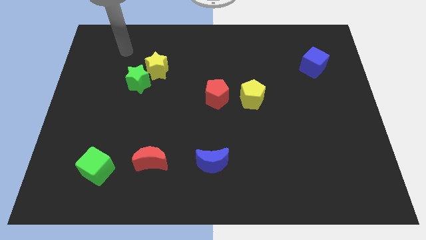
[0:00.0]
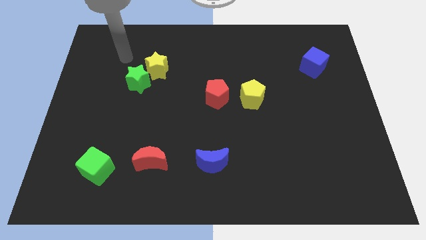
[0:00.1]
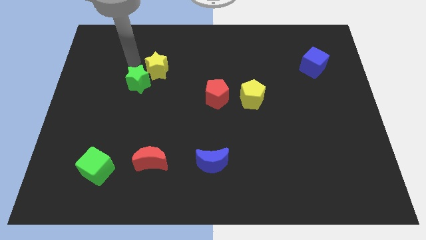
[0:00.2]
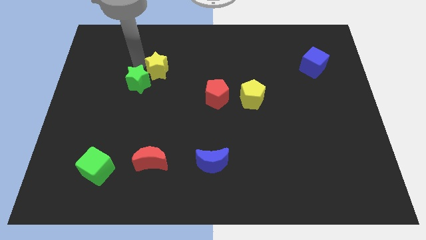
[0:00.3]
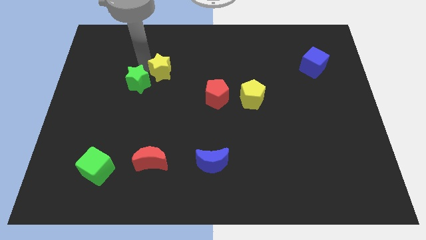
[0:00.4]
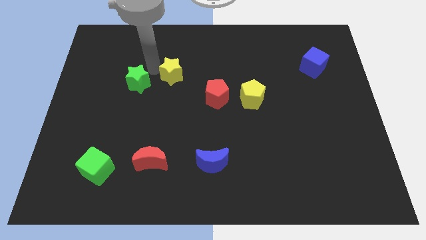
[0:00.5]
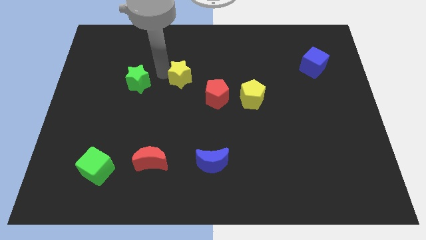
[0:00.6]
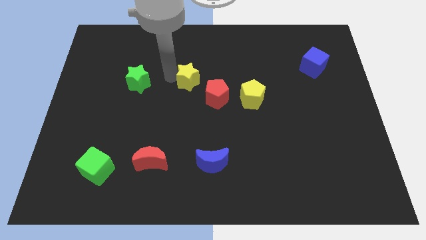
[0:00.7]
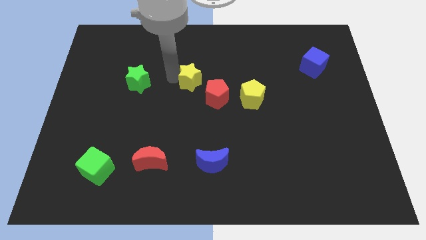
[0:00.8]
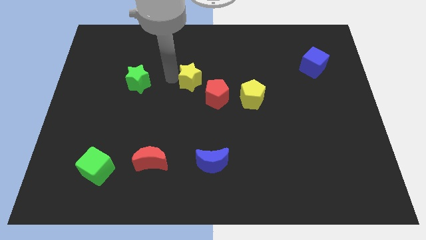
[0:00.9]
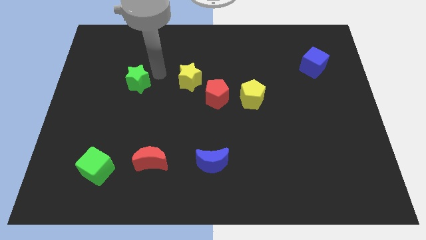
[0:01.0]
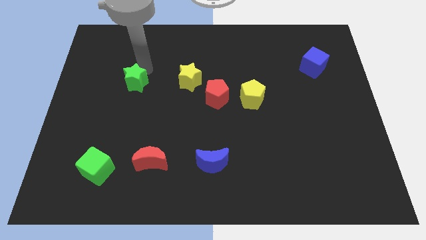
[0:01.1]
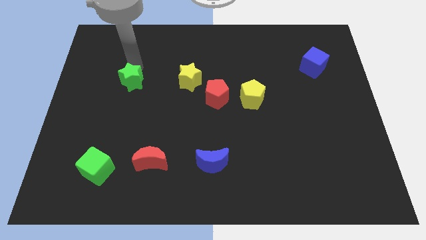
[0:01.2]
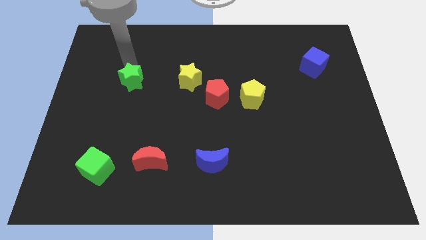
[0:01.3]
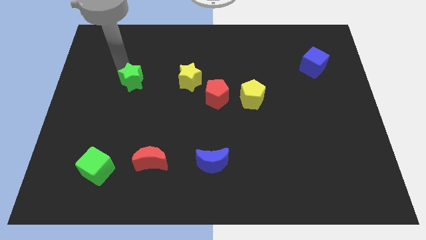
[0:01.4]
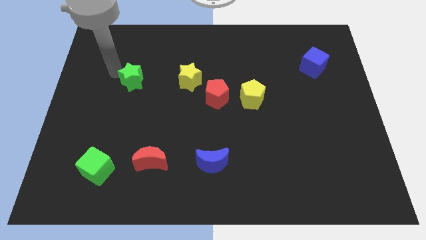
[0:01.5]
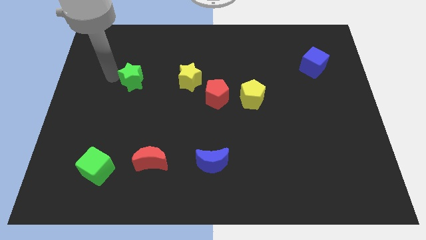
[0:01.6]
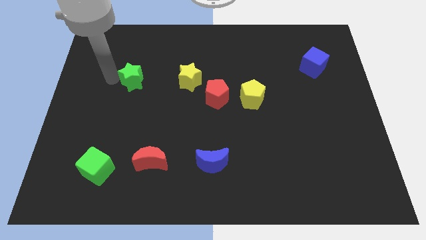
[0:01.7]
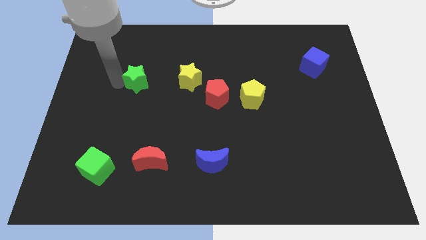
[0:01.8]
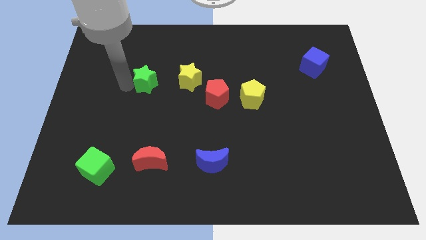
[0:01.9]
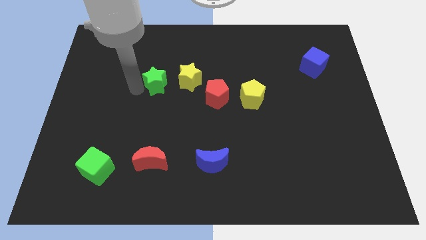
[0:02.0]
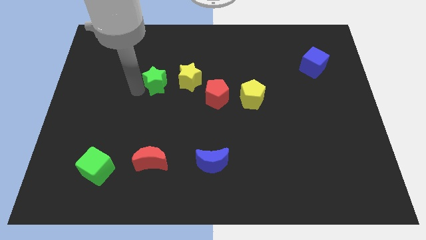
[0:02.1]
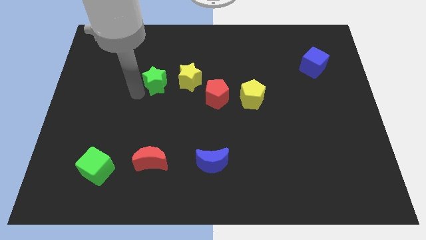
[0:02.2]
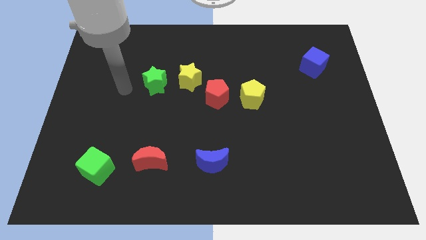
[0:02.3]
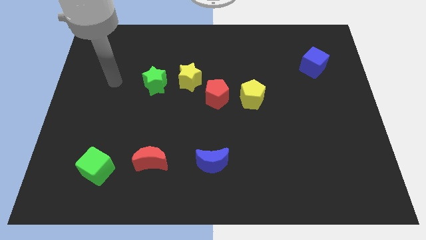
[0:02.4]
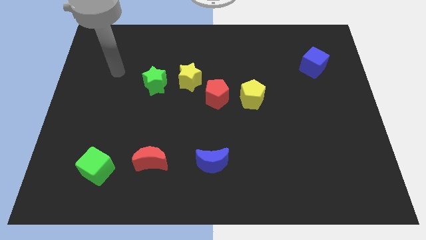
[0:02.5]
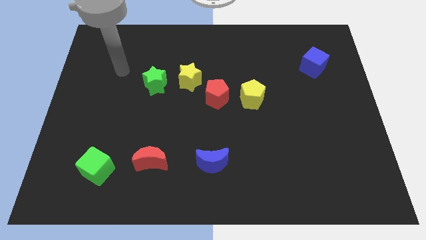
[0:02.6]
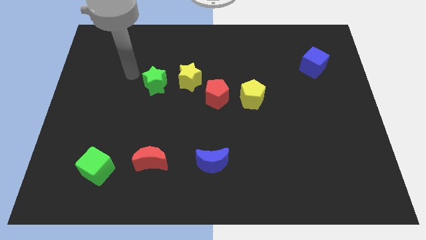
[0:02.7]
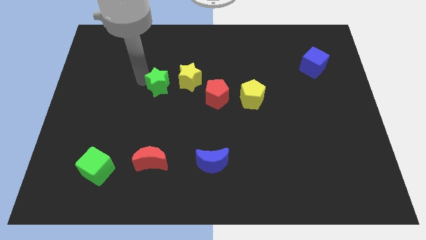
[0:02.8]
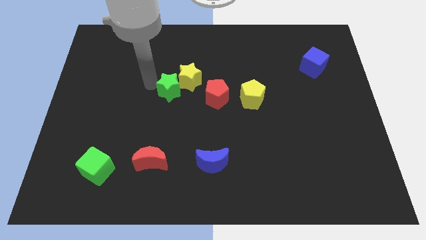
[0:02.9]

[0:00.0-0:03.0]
separate yellow star from the green star

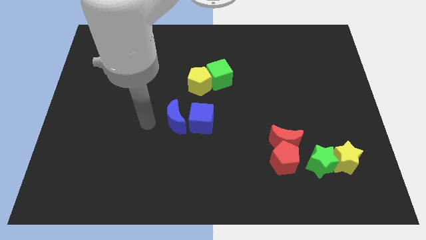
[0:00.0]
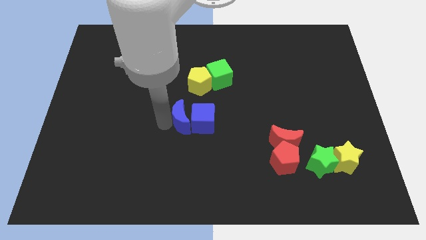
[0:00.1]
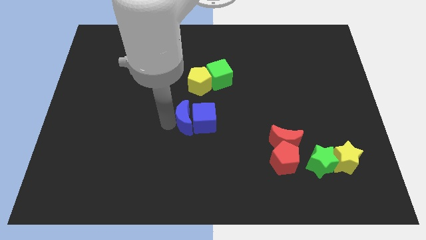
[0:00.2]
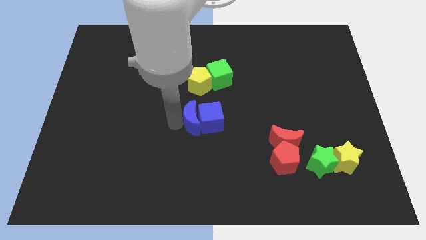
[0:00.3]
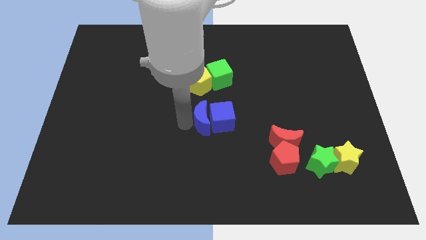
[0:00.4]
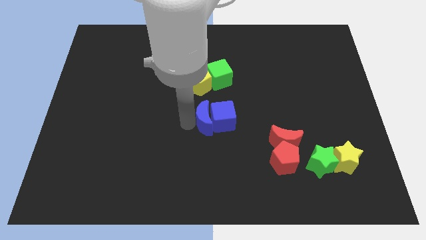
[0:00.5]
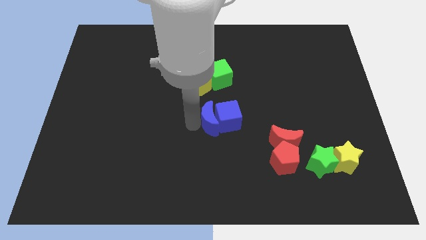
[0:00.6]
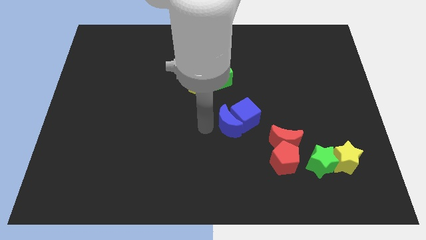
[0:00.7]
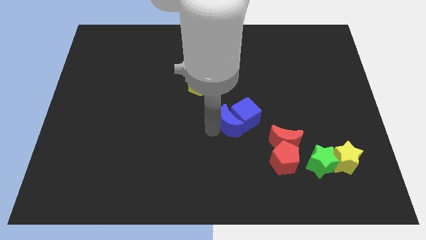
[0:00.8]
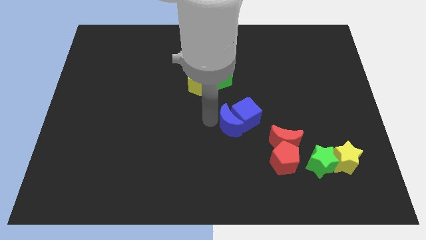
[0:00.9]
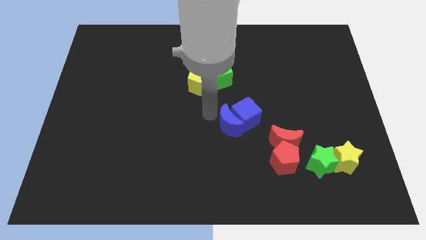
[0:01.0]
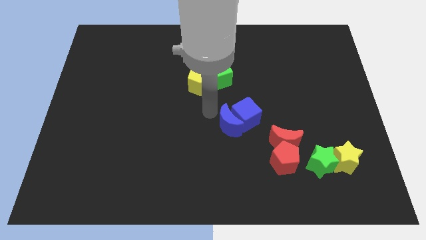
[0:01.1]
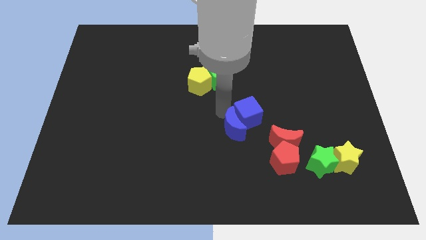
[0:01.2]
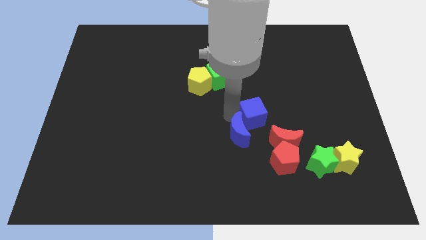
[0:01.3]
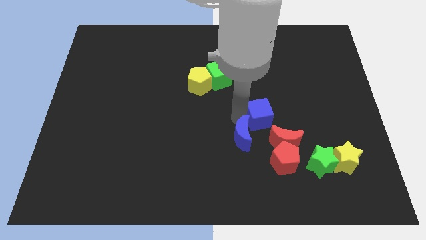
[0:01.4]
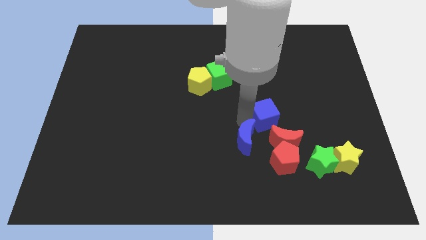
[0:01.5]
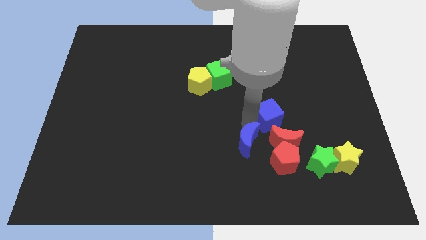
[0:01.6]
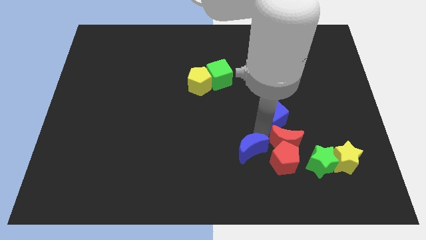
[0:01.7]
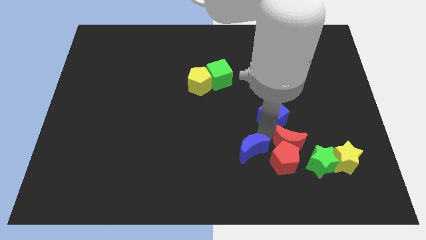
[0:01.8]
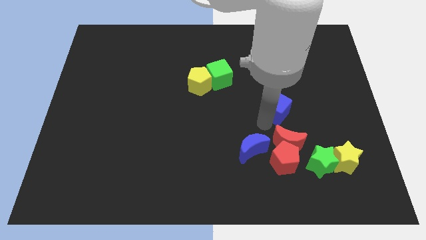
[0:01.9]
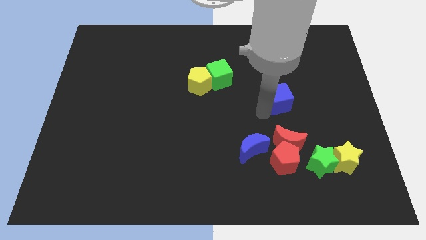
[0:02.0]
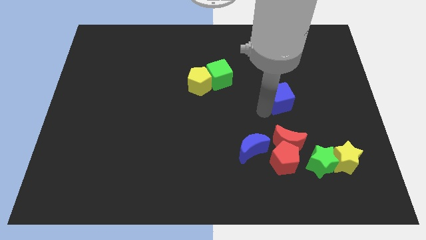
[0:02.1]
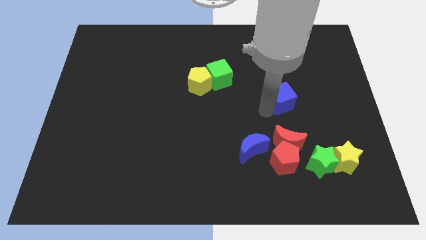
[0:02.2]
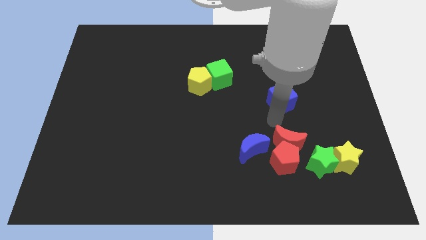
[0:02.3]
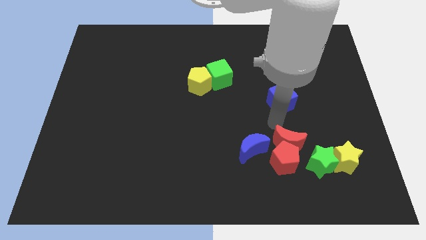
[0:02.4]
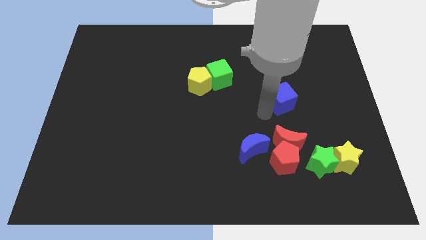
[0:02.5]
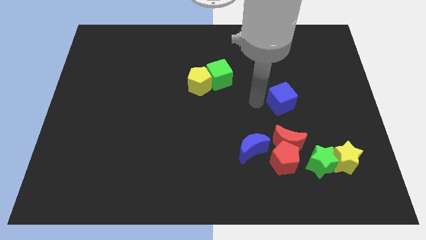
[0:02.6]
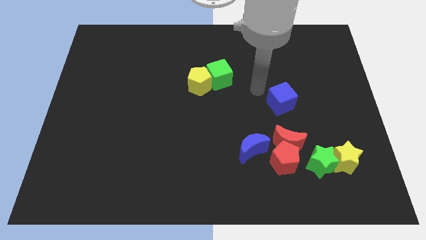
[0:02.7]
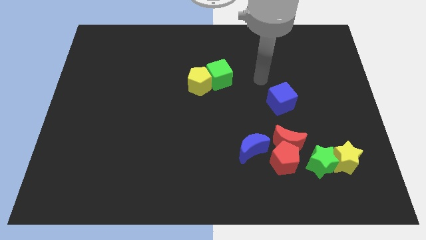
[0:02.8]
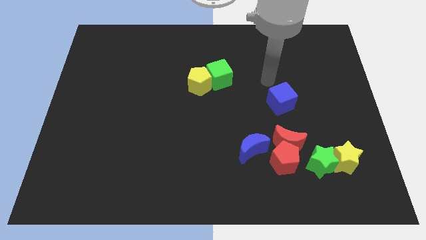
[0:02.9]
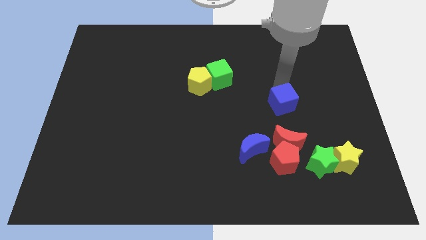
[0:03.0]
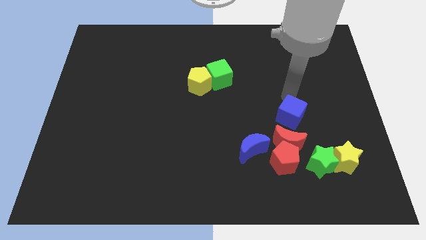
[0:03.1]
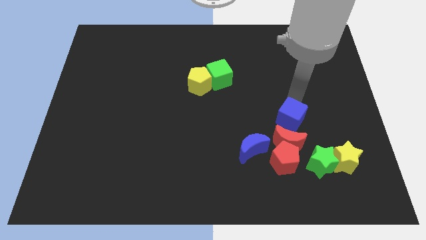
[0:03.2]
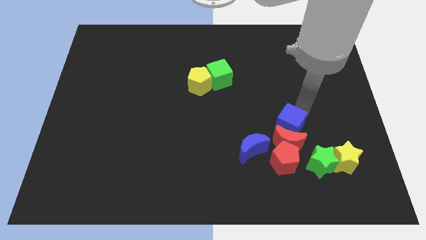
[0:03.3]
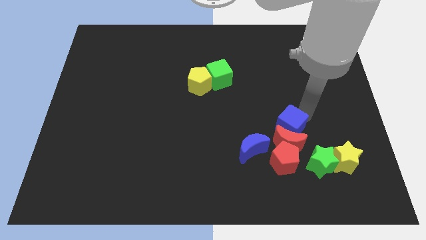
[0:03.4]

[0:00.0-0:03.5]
move the blue blocks towards the red blocks

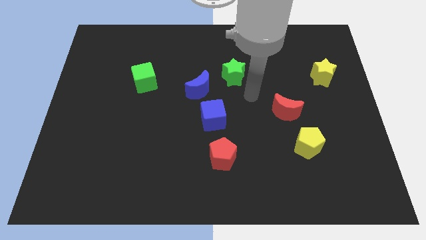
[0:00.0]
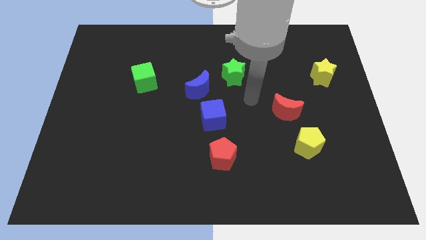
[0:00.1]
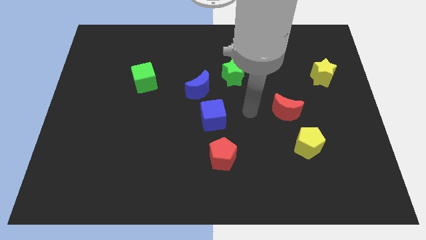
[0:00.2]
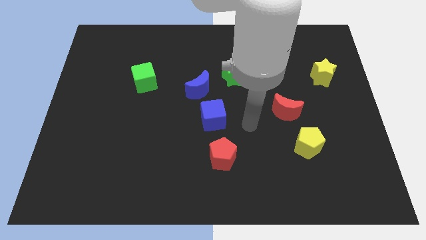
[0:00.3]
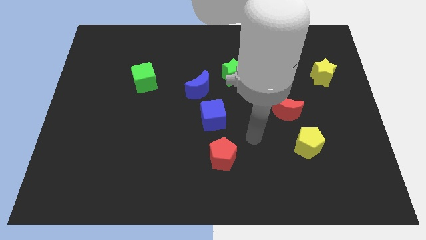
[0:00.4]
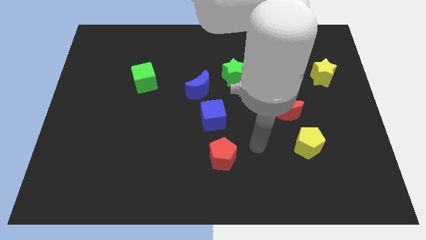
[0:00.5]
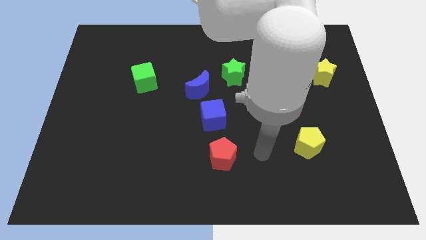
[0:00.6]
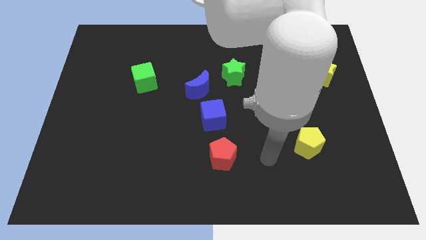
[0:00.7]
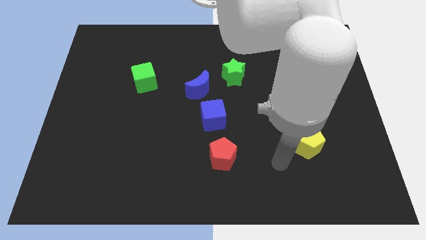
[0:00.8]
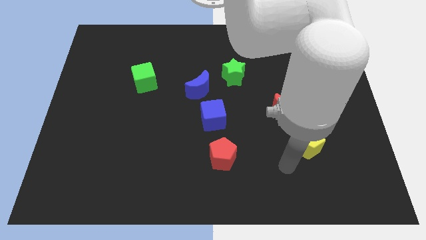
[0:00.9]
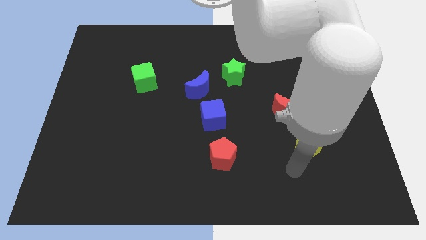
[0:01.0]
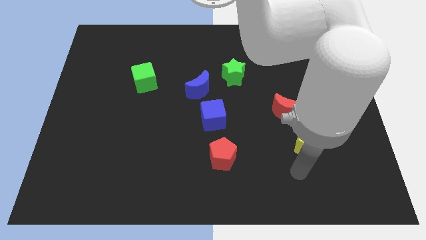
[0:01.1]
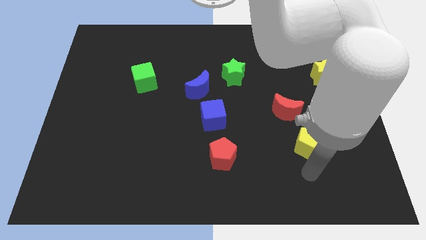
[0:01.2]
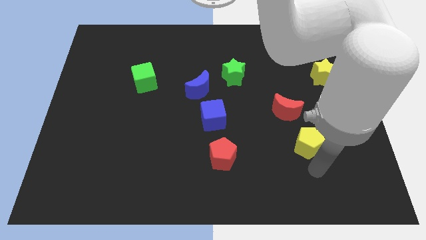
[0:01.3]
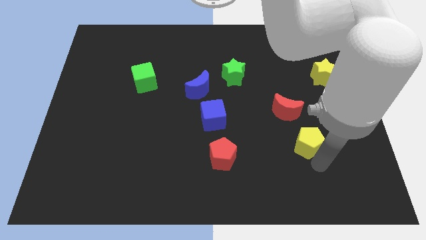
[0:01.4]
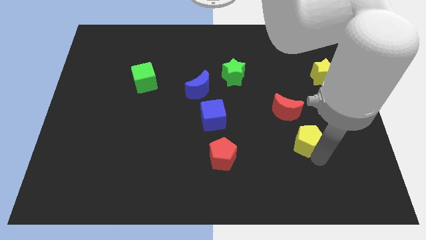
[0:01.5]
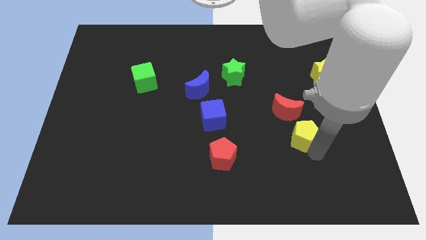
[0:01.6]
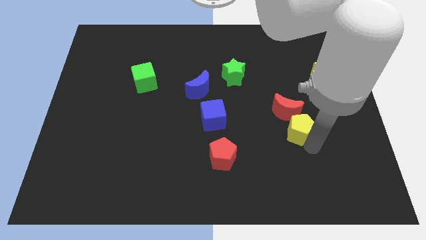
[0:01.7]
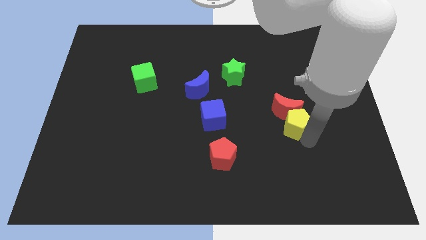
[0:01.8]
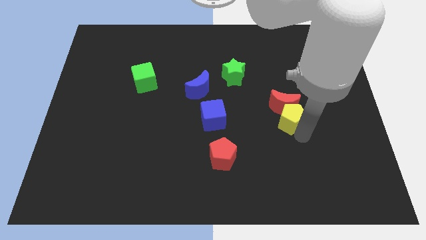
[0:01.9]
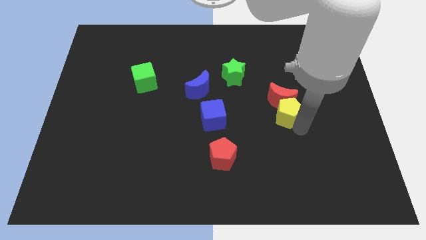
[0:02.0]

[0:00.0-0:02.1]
push the yellow pentagon into the red crescent

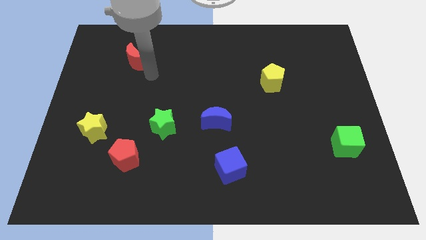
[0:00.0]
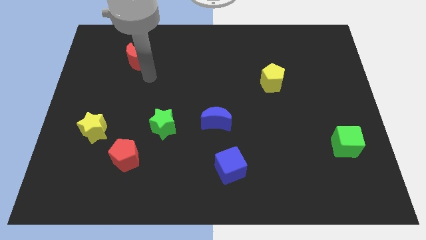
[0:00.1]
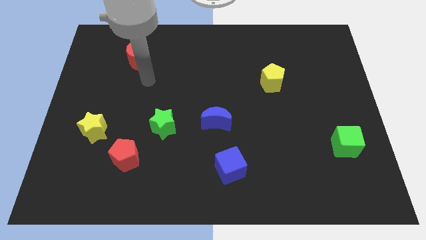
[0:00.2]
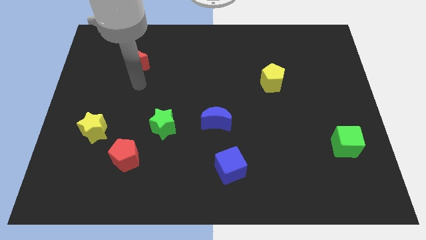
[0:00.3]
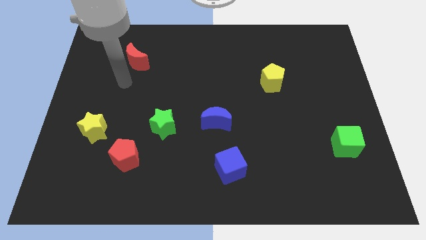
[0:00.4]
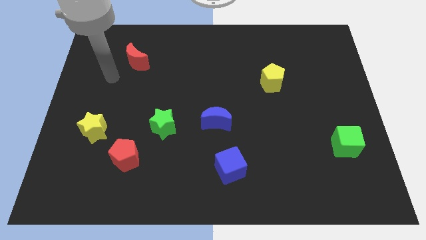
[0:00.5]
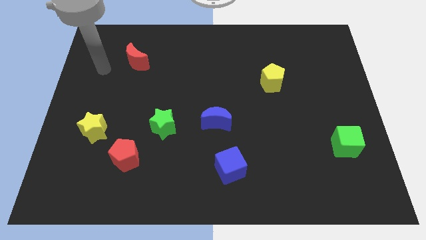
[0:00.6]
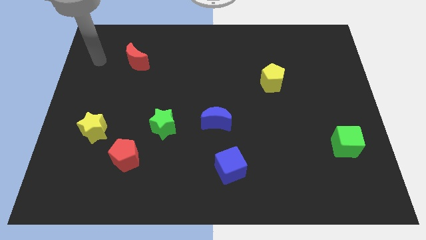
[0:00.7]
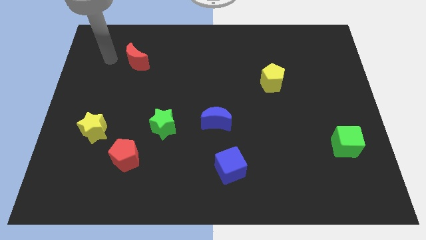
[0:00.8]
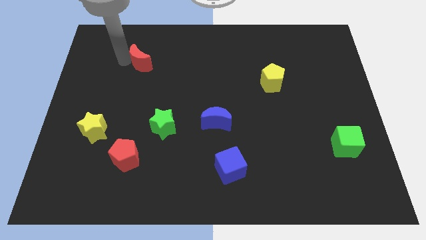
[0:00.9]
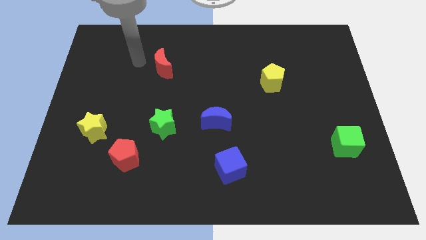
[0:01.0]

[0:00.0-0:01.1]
put the red crescent above the green star
